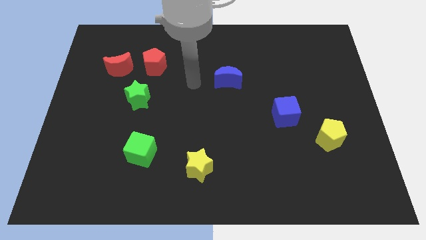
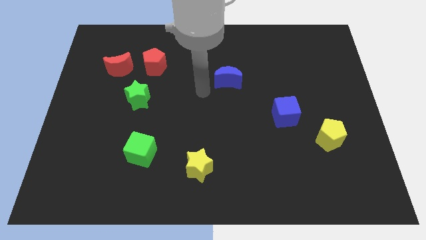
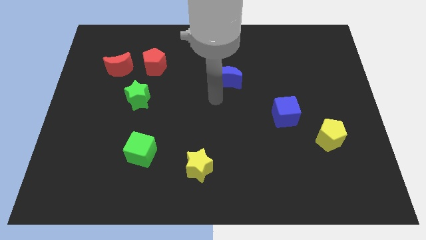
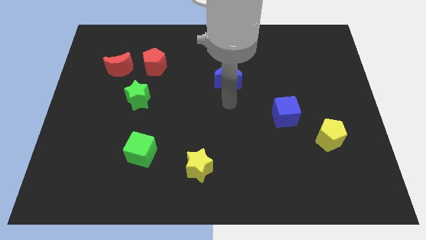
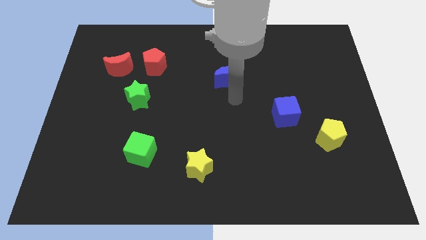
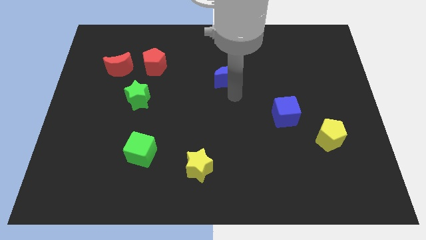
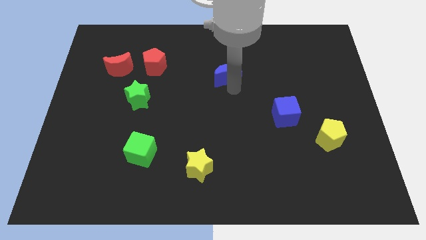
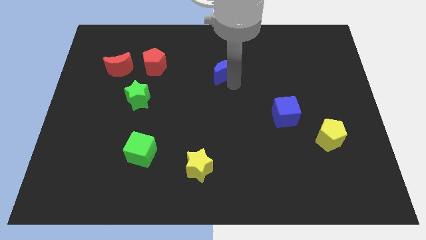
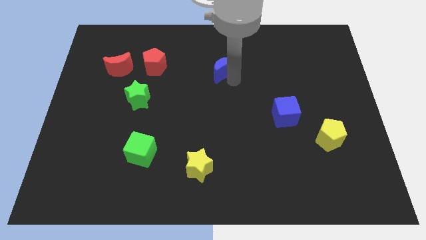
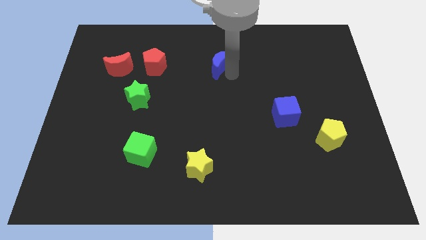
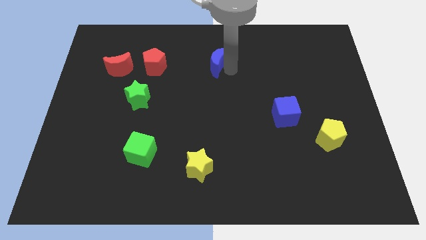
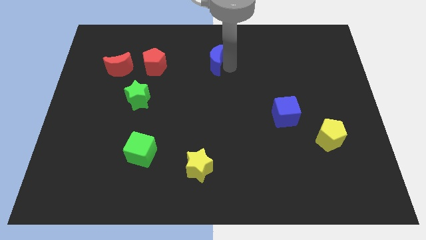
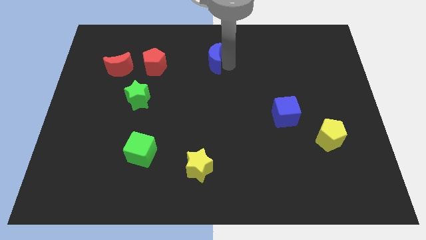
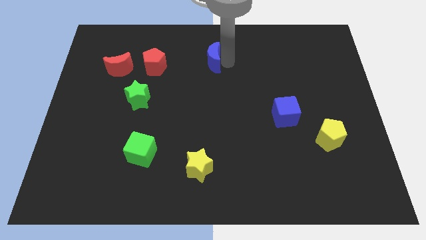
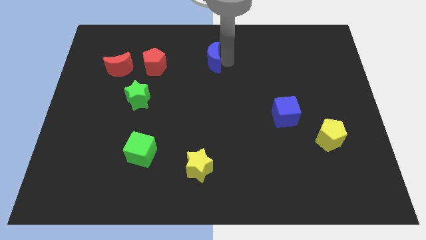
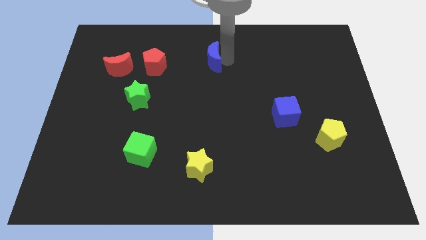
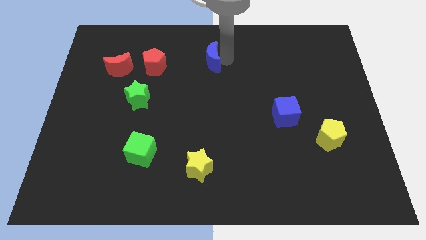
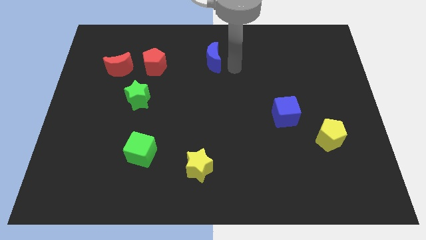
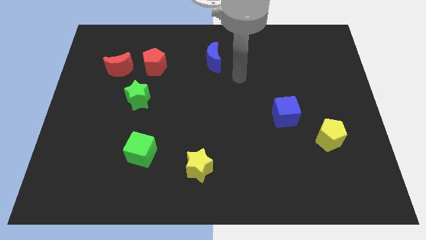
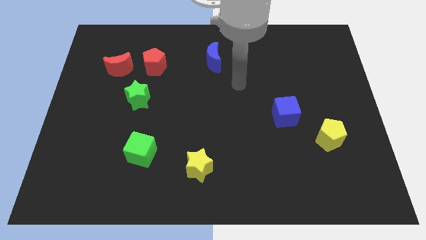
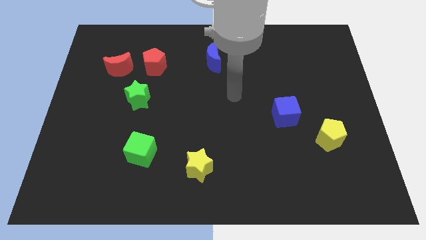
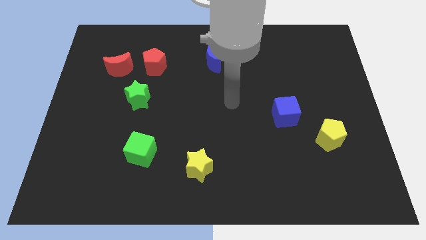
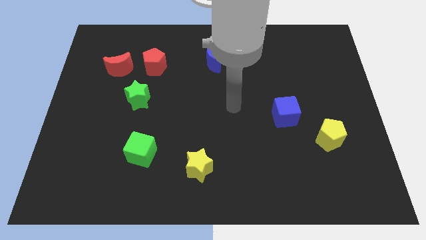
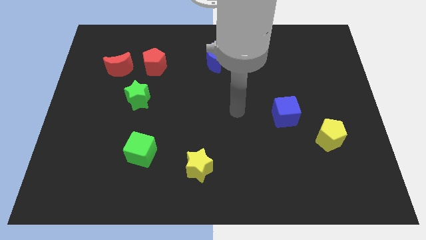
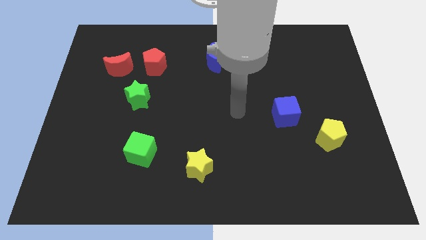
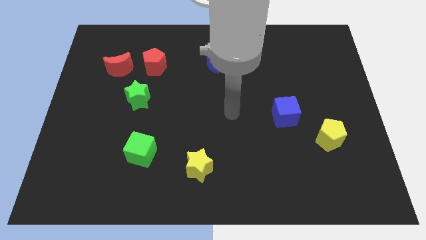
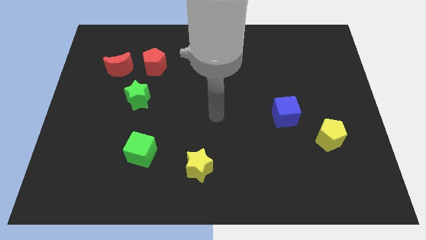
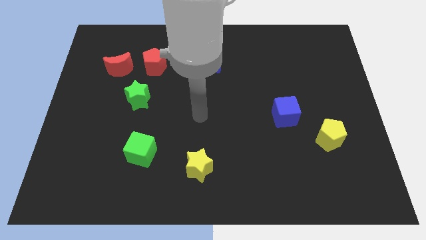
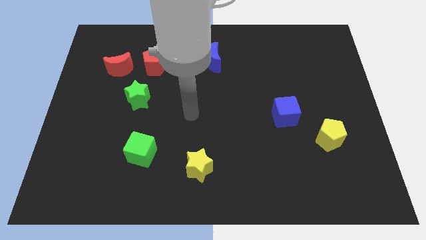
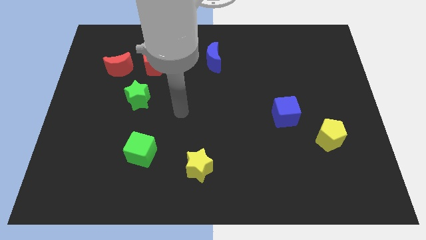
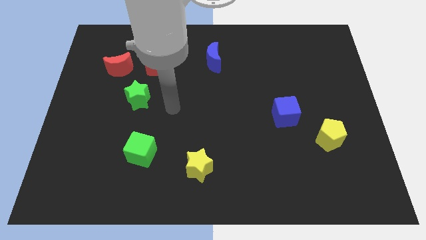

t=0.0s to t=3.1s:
push the blue cube slightly upwards

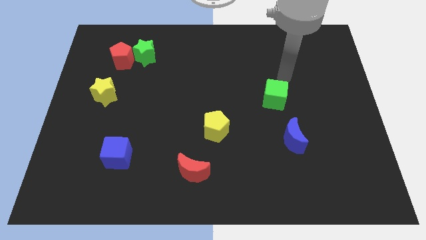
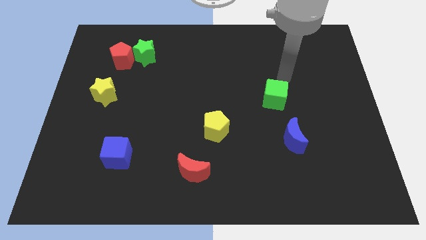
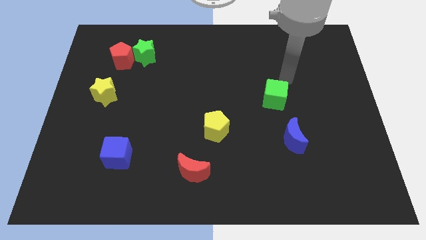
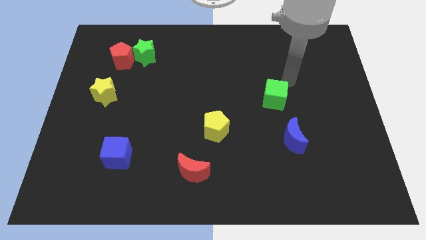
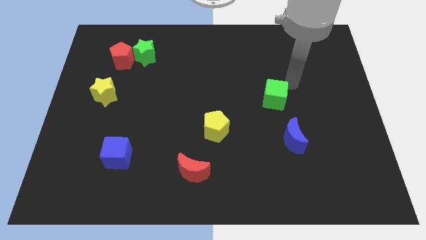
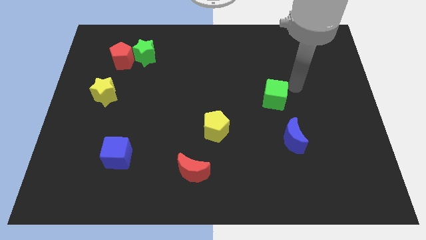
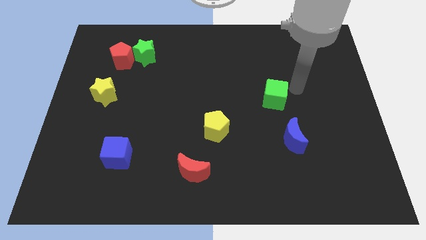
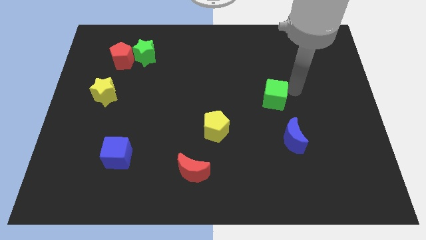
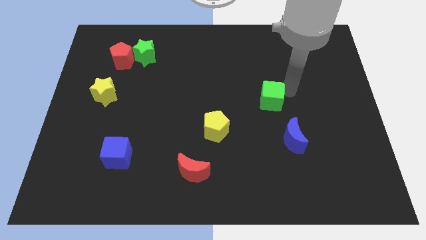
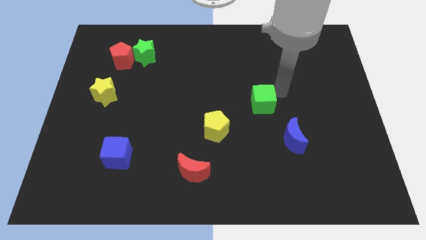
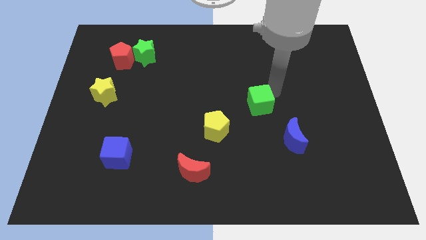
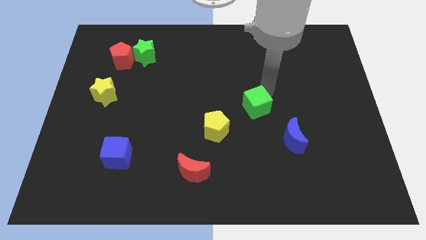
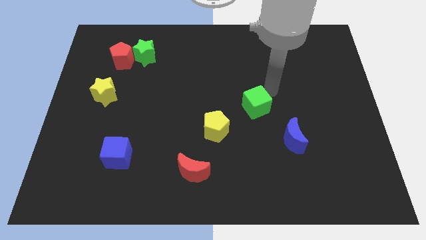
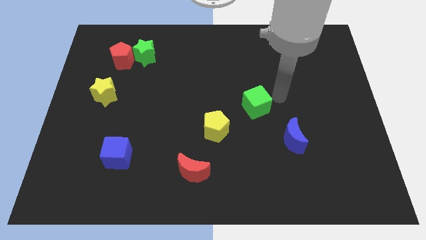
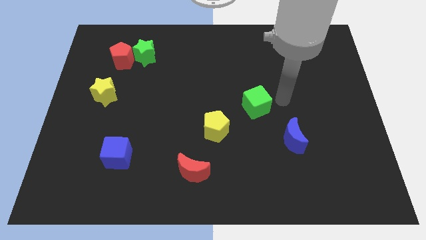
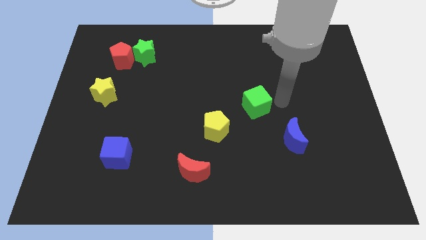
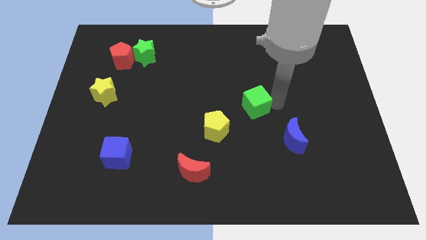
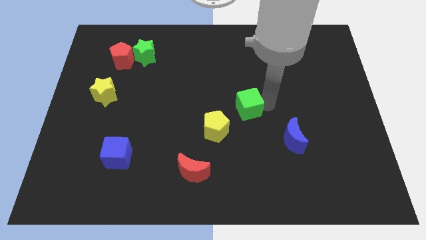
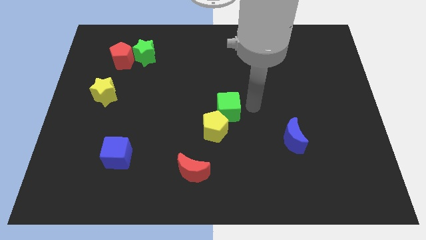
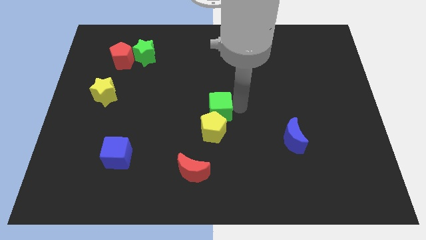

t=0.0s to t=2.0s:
move the green cube into the yellow pentagon

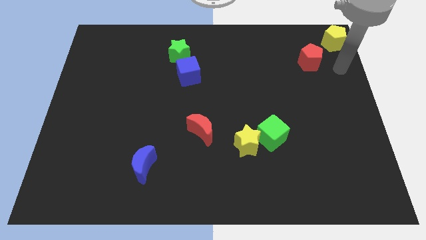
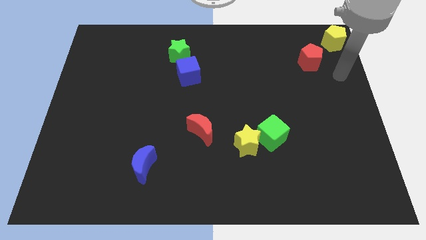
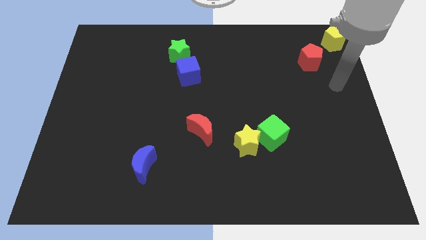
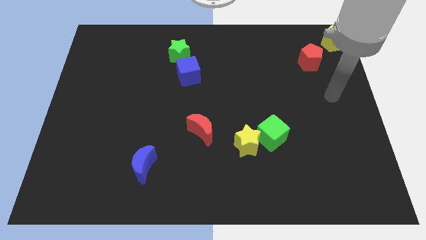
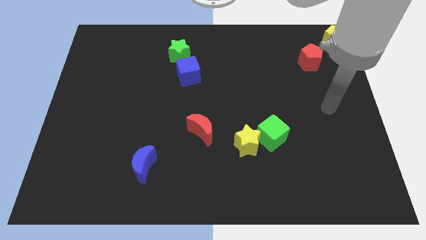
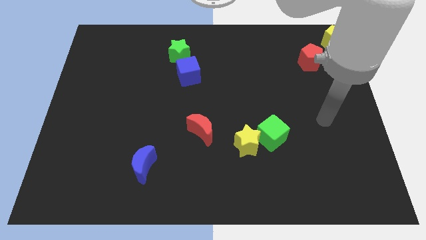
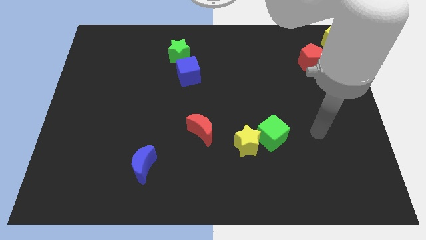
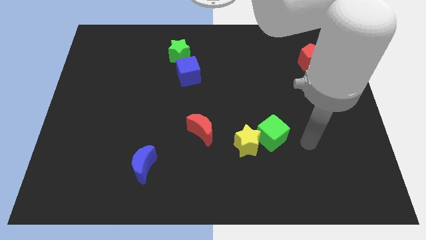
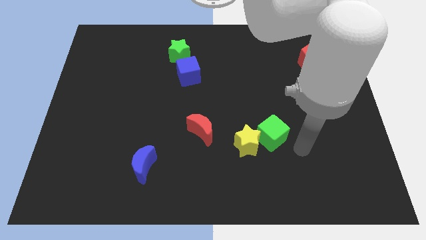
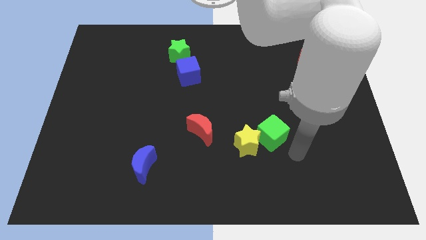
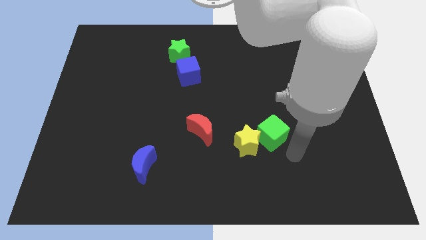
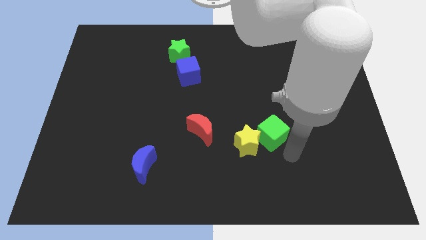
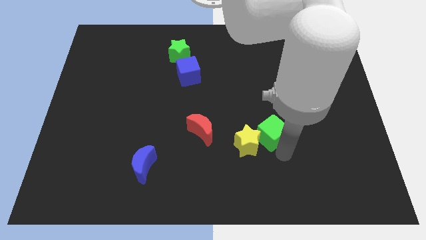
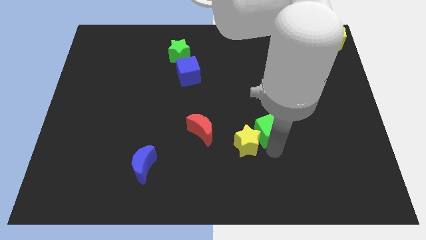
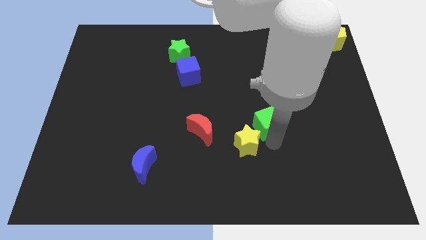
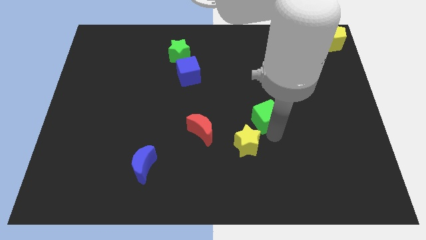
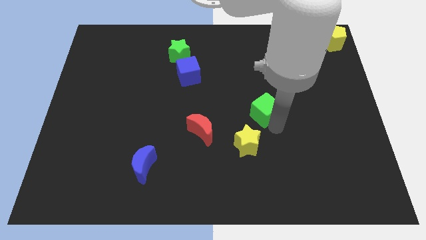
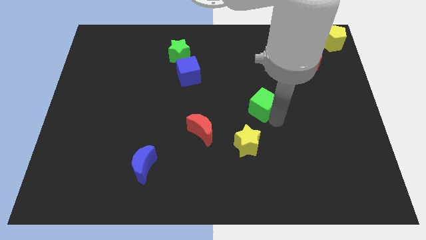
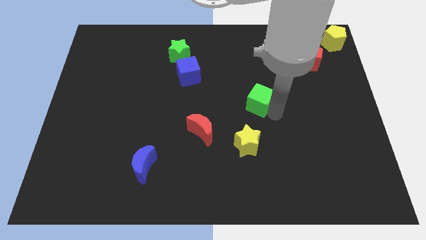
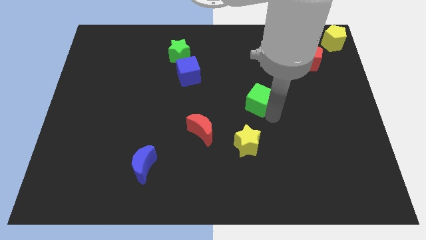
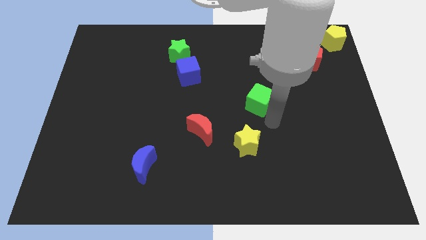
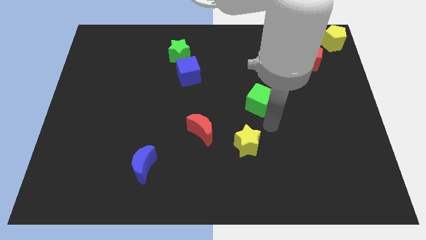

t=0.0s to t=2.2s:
slightly push the green cube above yellow star

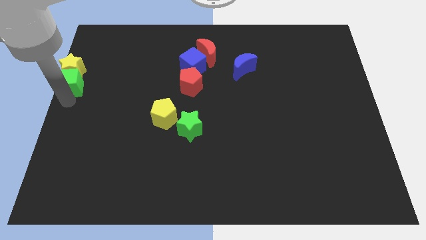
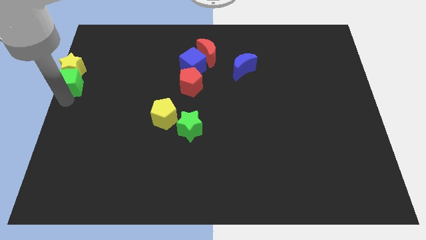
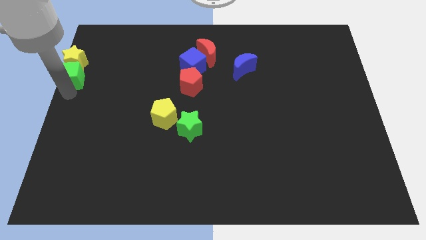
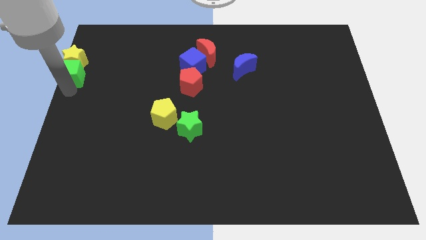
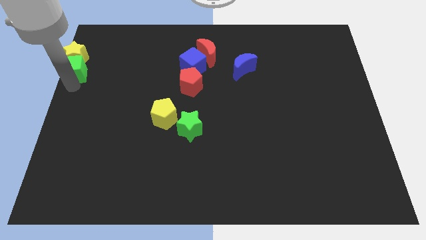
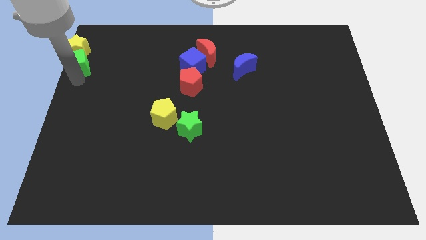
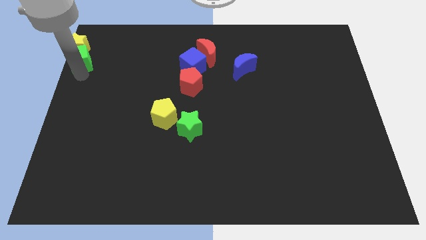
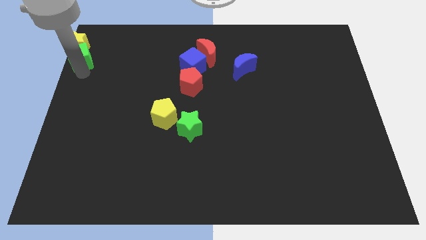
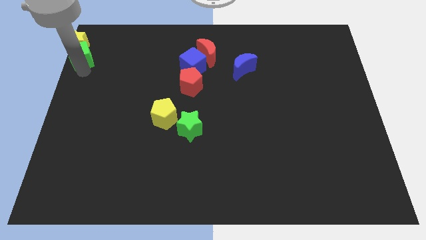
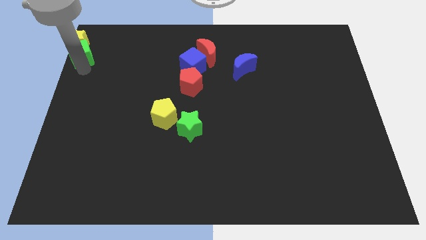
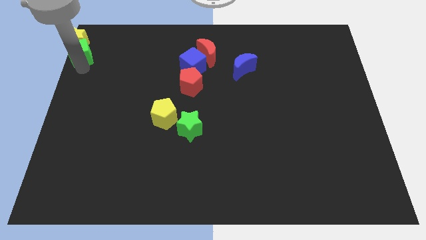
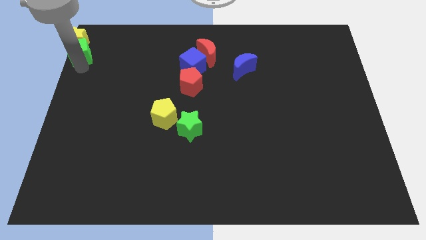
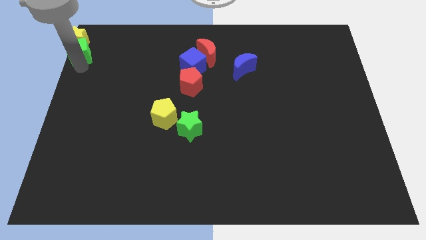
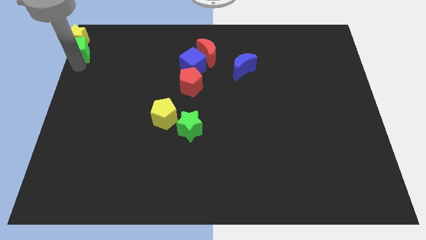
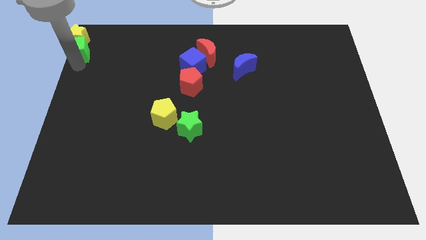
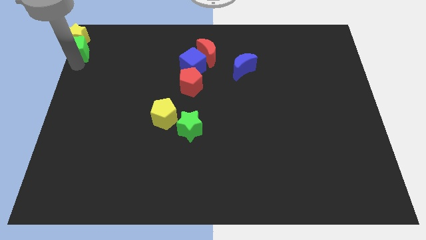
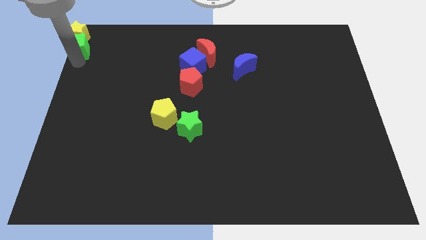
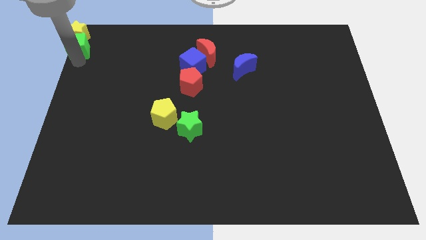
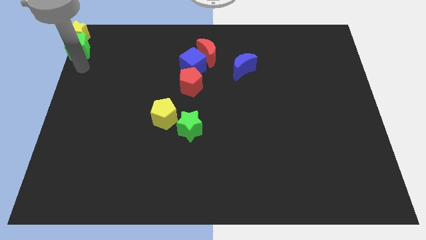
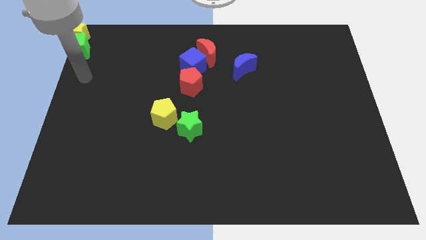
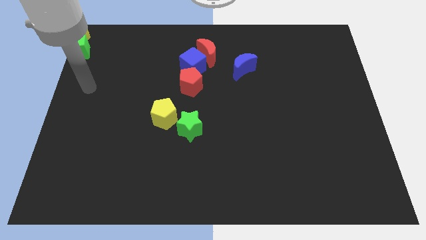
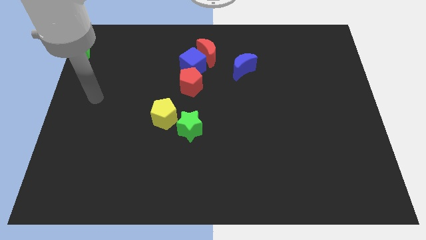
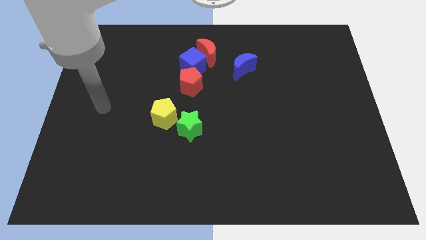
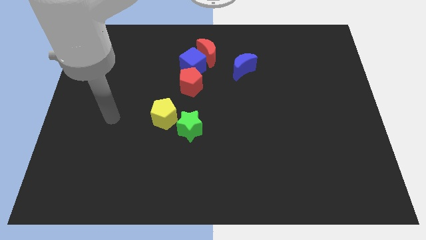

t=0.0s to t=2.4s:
place yellow star towards left up corner
